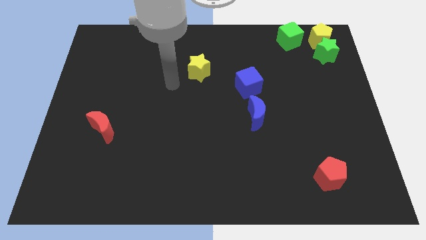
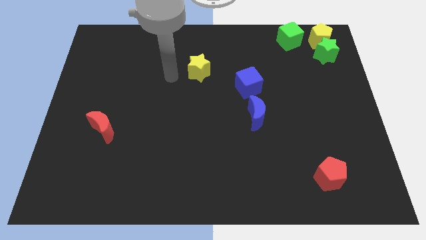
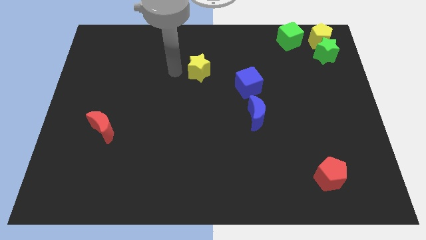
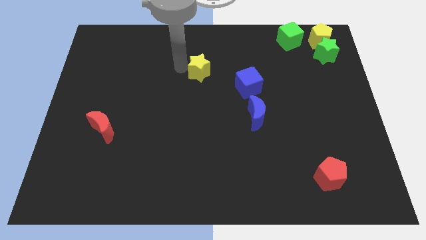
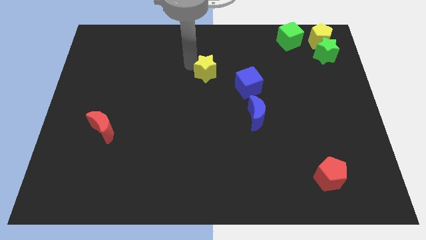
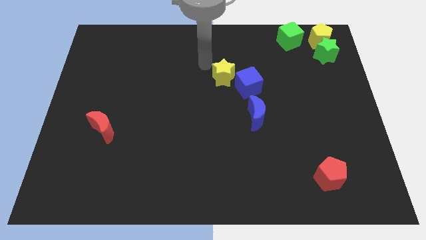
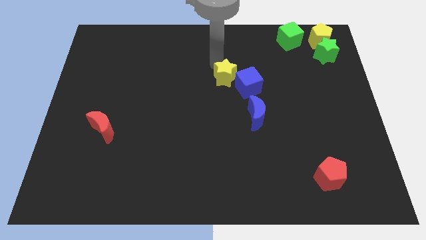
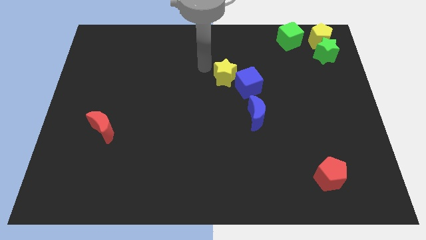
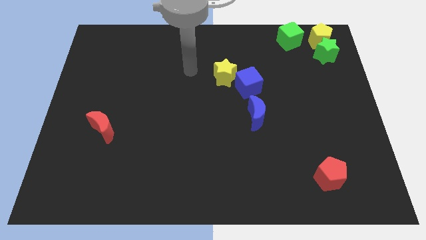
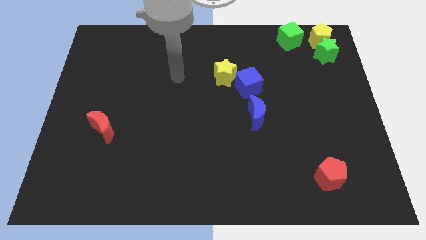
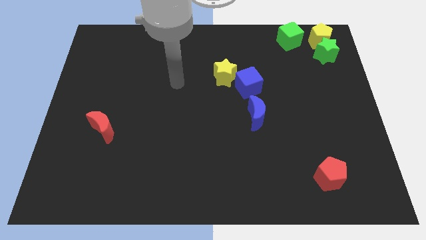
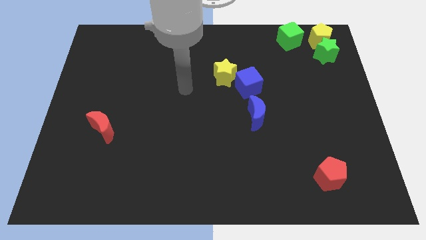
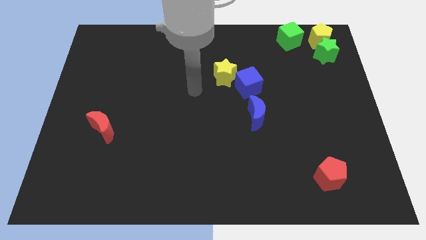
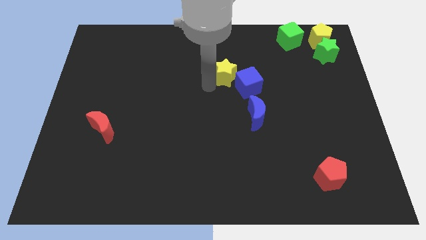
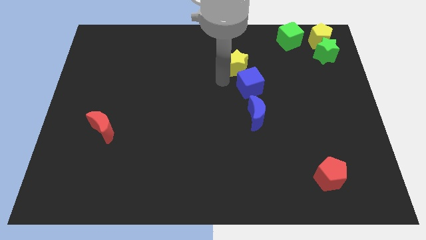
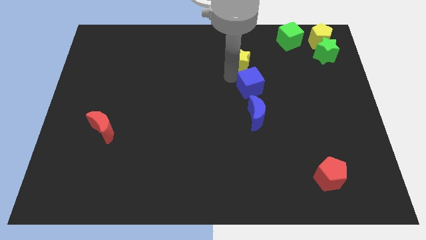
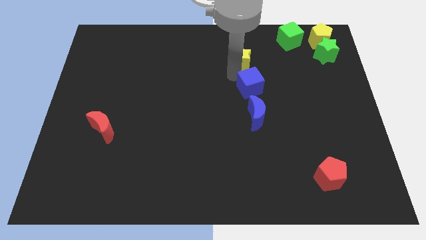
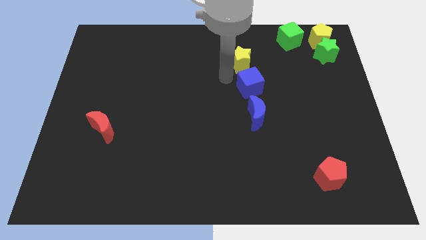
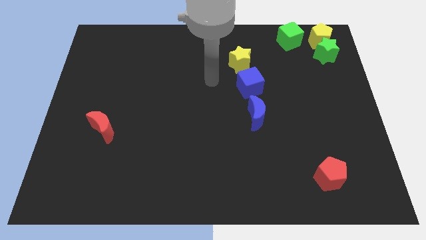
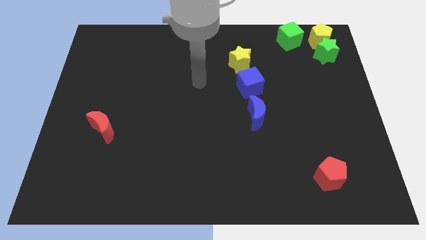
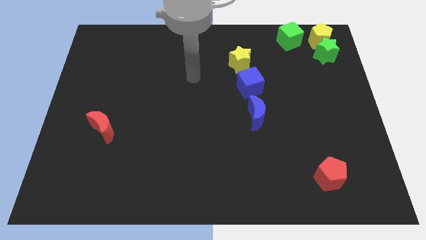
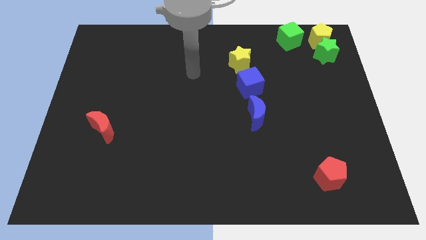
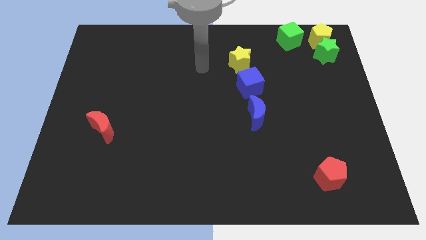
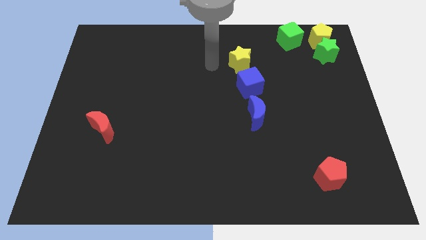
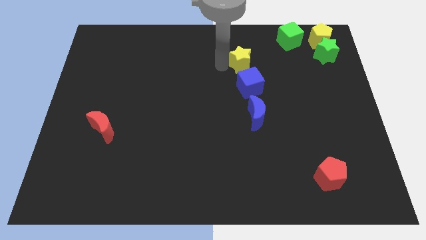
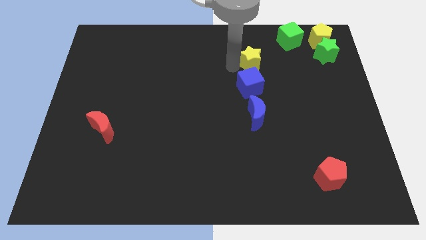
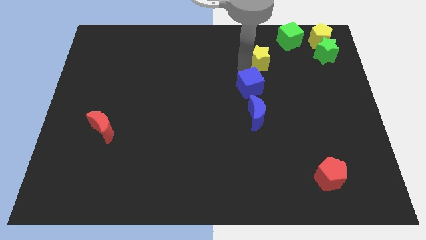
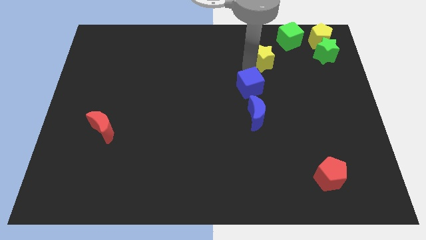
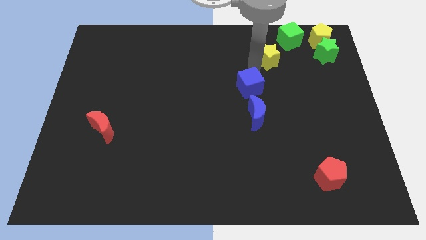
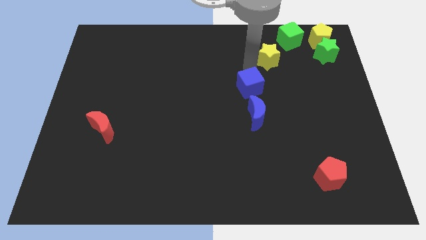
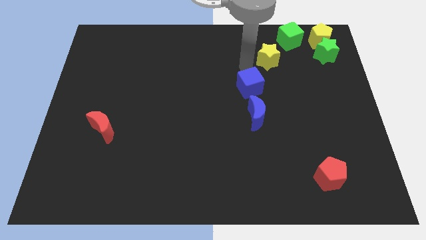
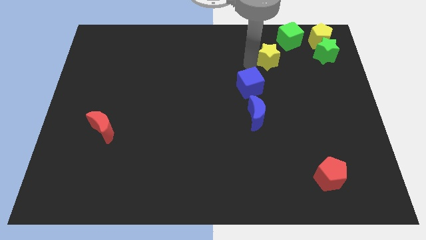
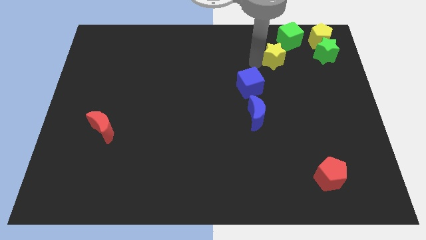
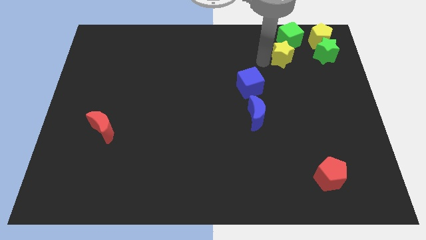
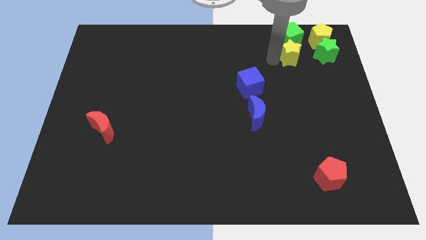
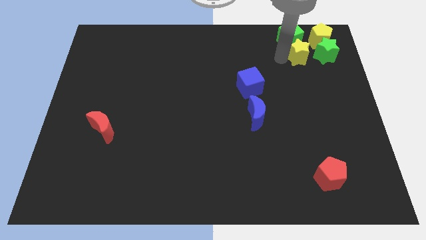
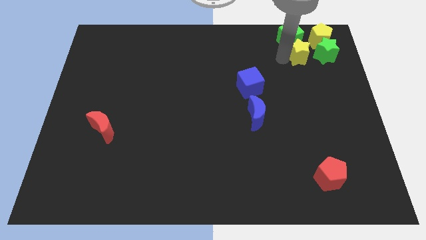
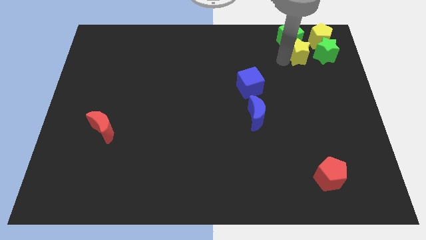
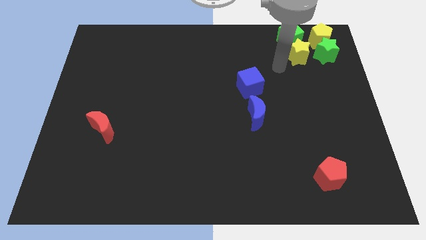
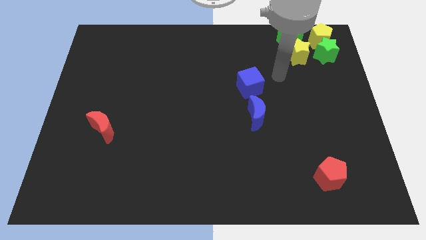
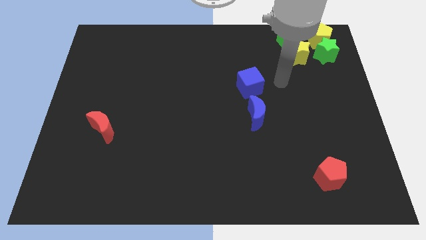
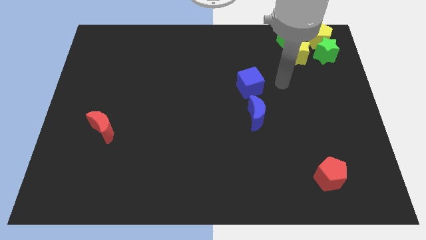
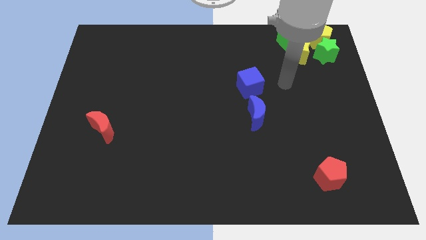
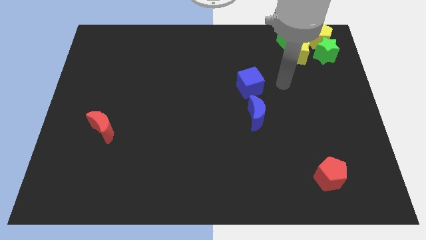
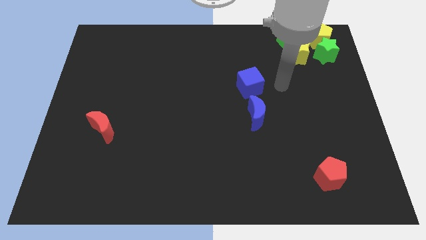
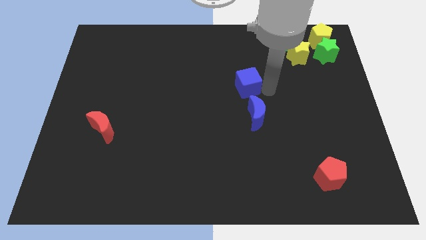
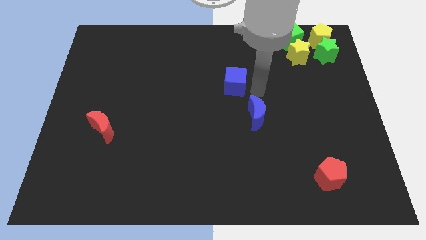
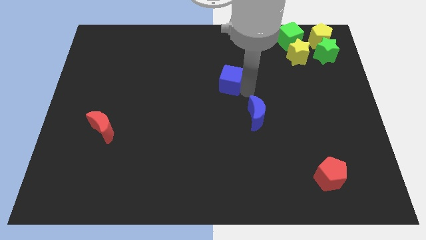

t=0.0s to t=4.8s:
place the yellow star to the left of green star

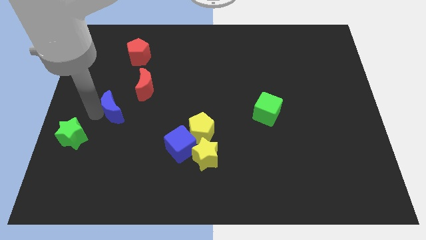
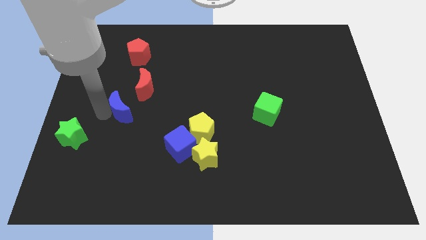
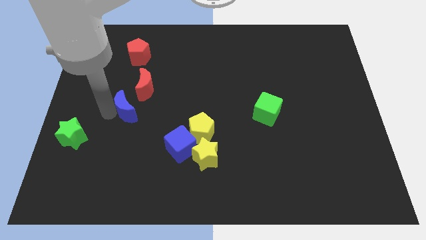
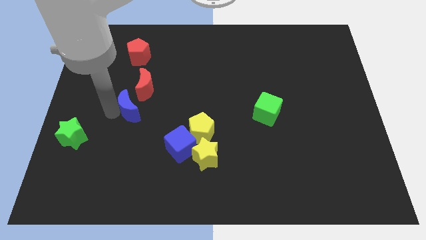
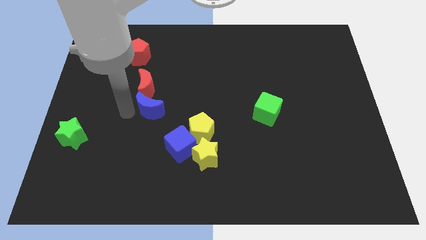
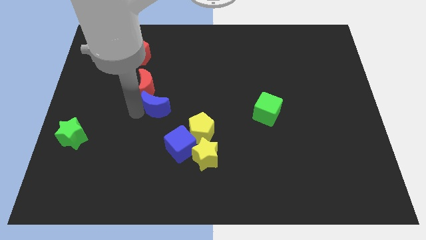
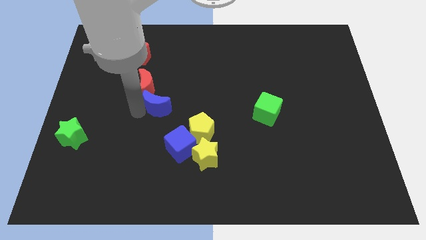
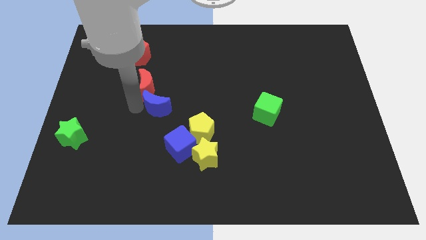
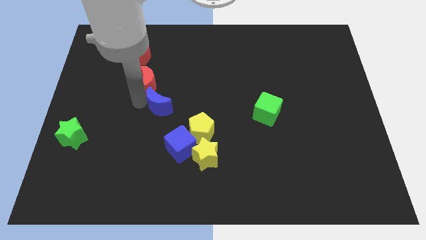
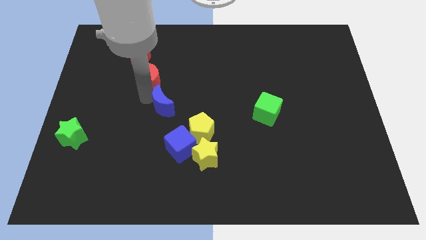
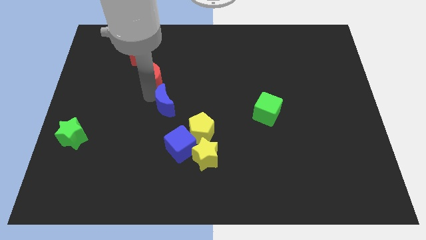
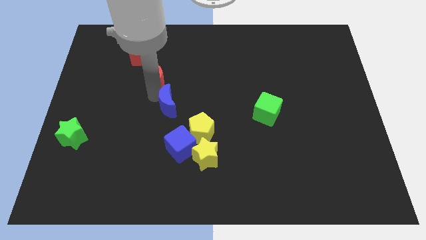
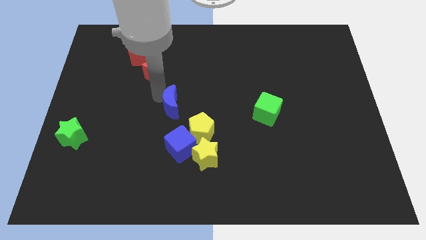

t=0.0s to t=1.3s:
push blue crescent below red crescent

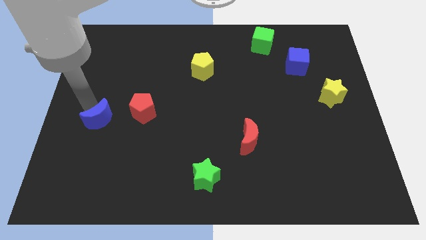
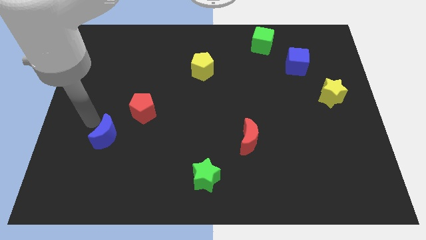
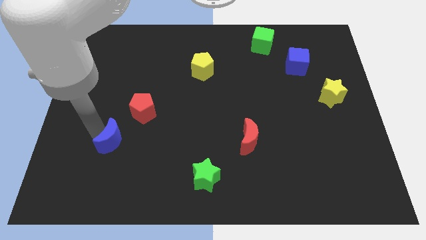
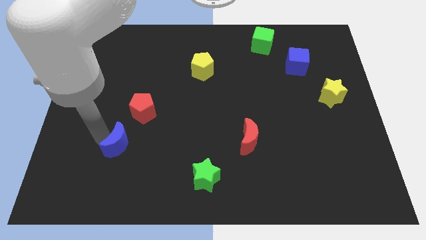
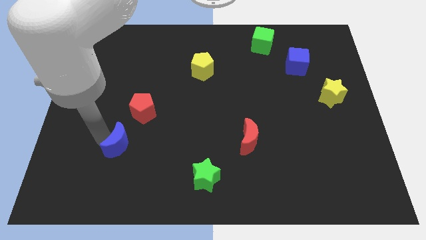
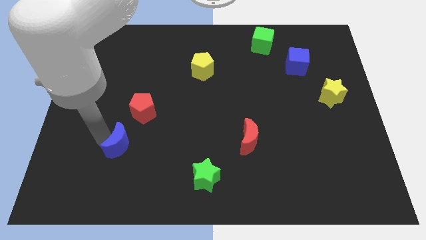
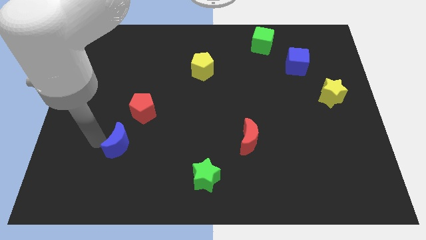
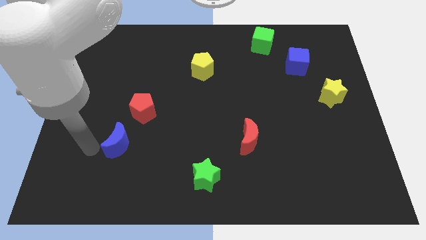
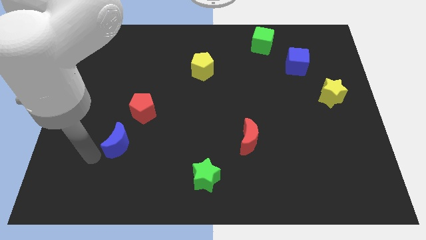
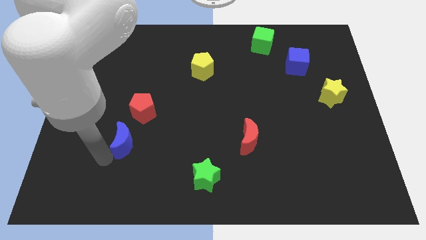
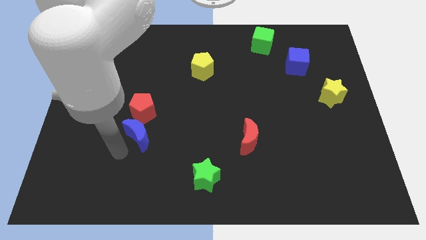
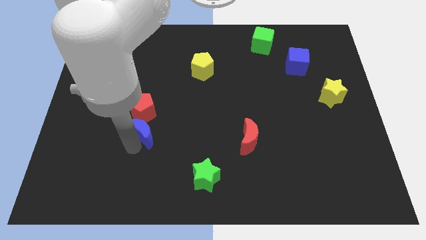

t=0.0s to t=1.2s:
move the blue moon bottom side of the red pentagon

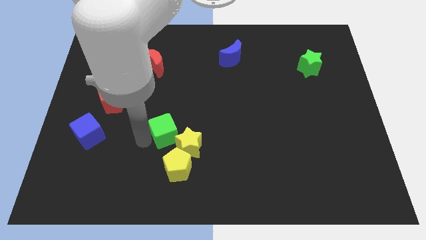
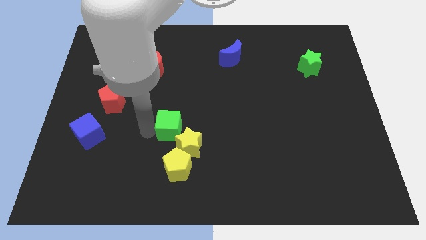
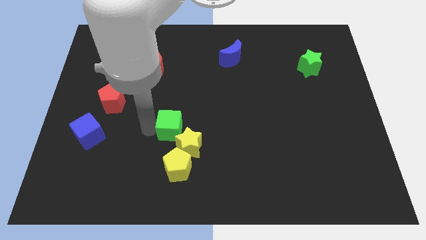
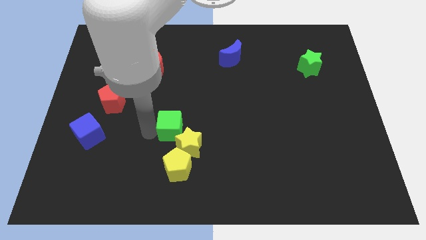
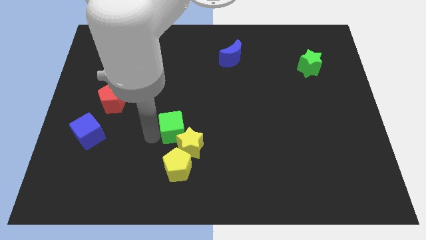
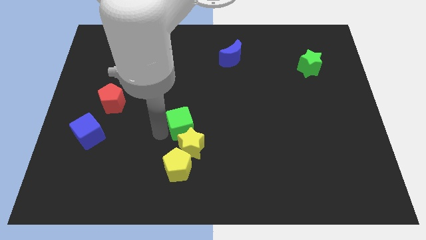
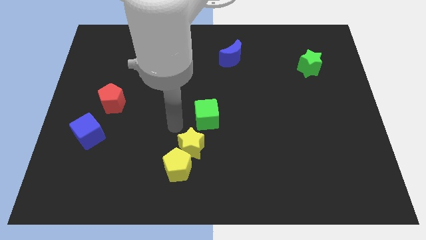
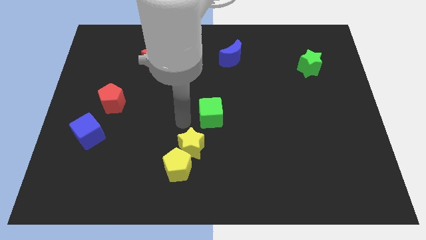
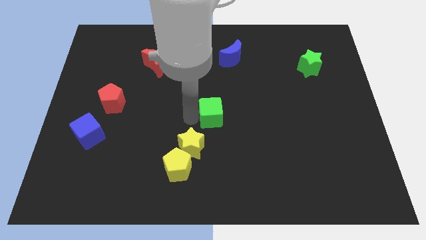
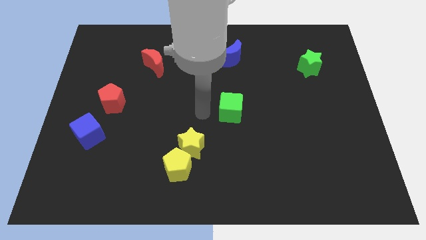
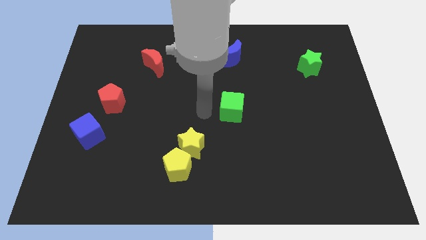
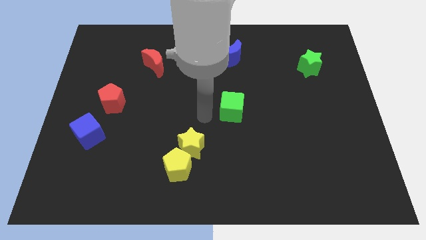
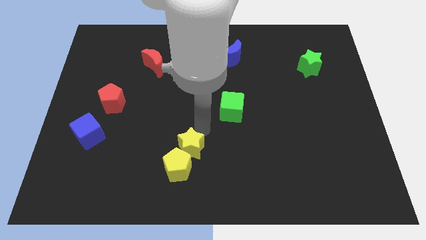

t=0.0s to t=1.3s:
push green cube to the top right of the board

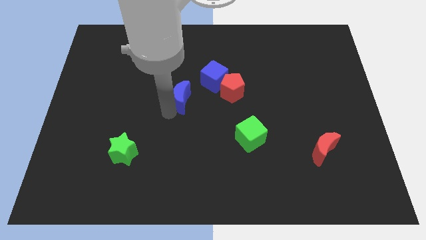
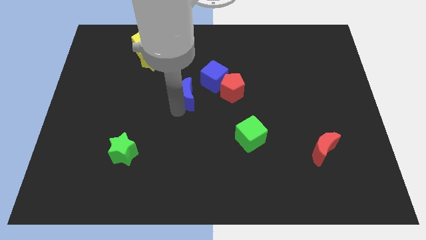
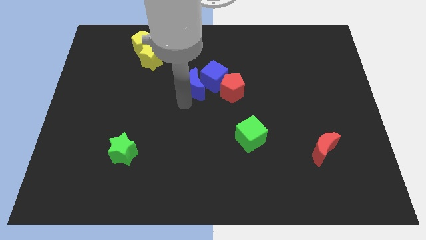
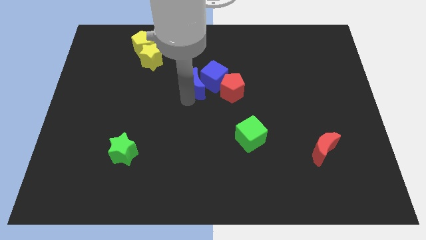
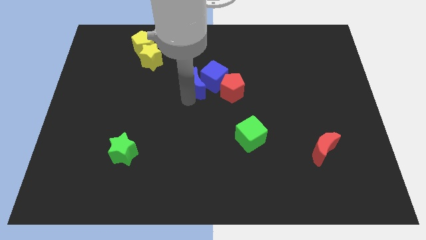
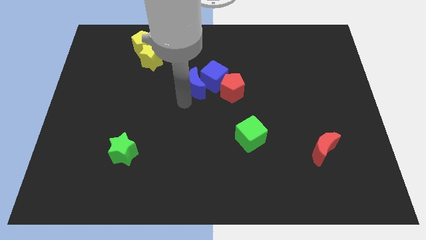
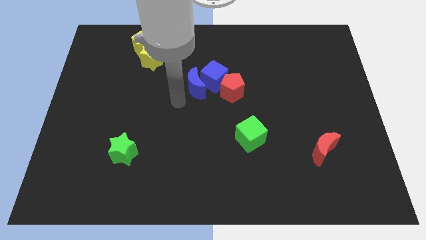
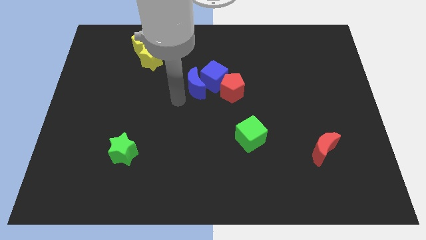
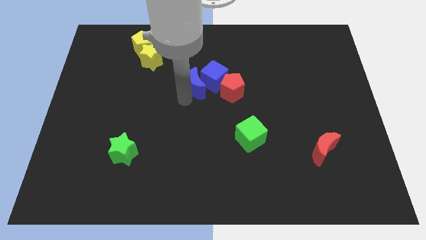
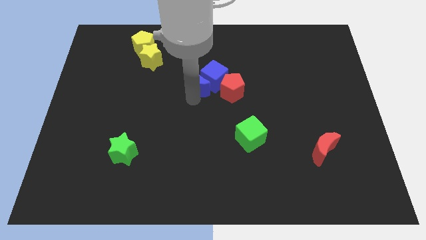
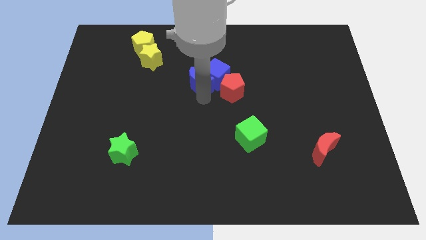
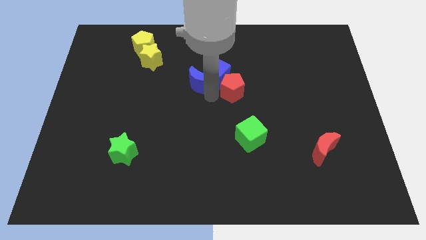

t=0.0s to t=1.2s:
move blue moon into the blue cube
